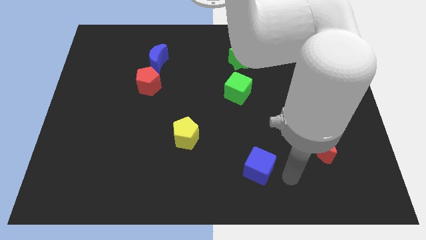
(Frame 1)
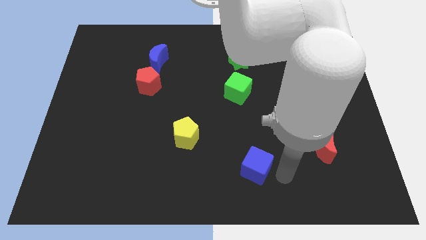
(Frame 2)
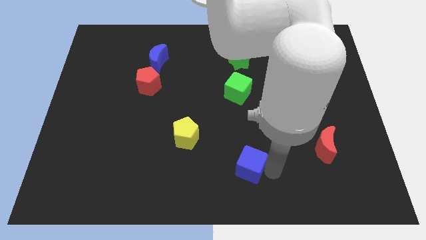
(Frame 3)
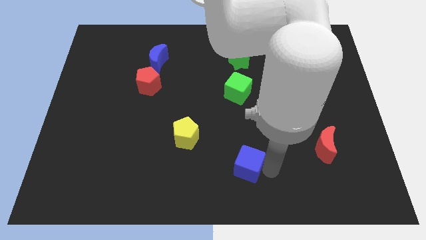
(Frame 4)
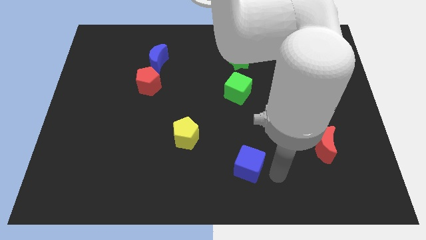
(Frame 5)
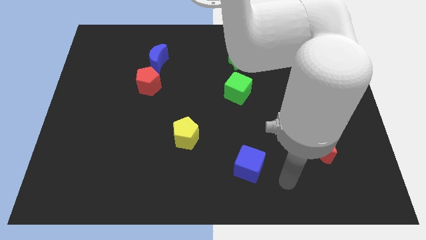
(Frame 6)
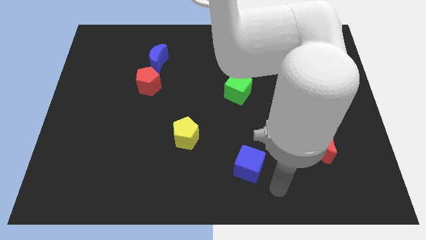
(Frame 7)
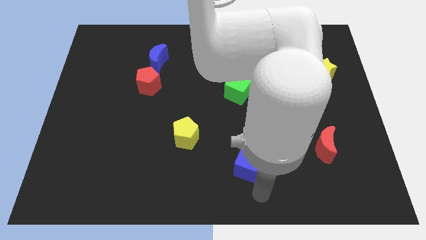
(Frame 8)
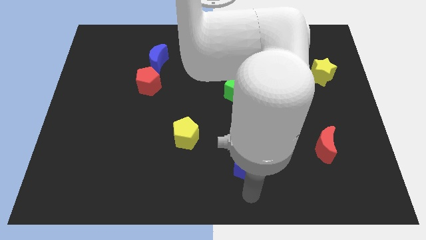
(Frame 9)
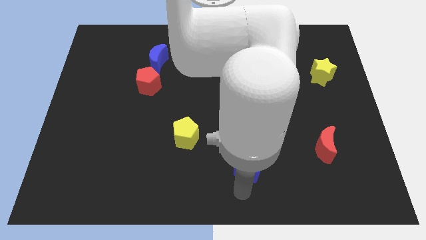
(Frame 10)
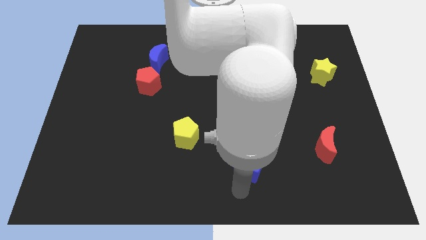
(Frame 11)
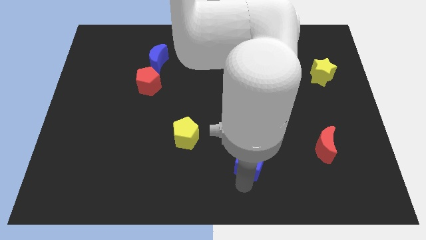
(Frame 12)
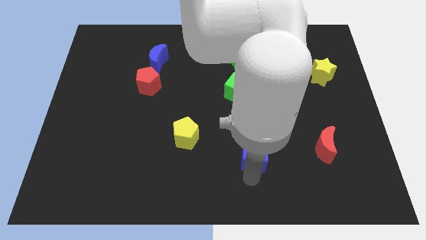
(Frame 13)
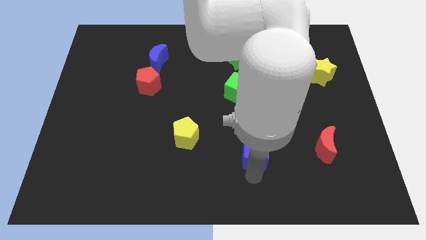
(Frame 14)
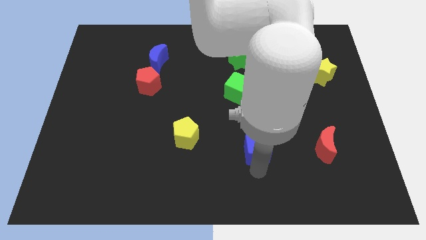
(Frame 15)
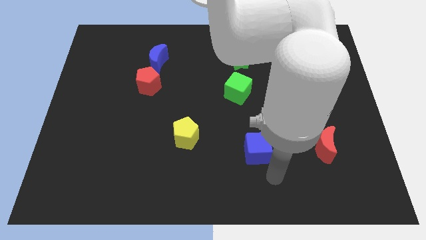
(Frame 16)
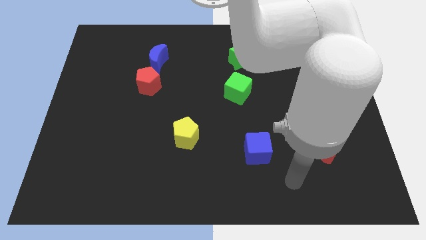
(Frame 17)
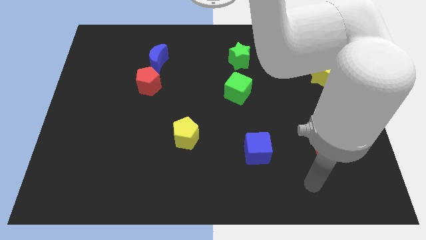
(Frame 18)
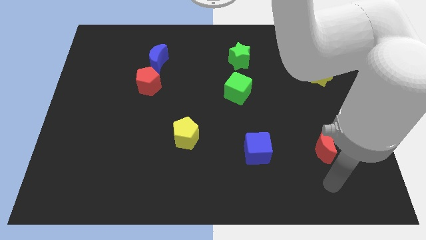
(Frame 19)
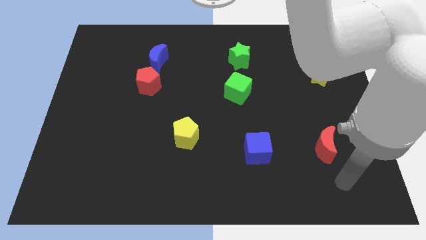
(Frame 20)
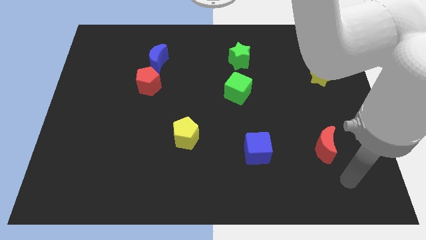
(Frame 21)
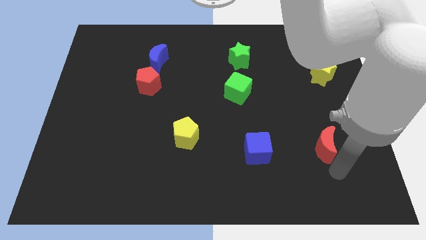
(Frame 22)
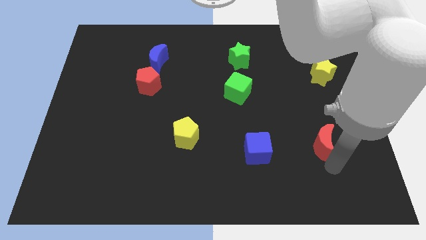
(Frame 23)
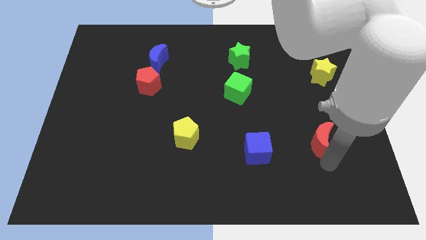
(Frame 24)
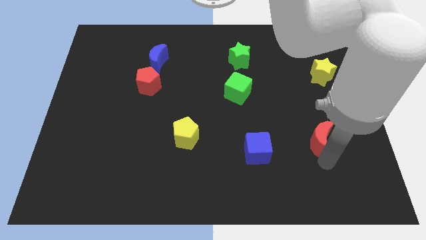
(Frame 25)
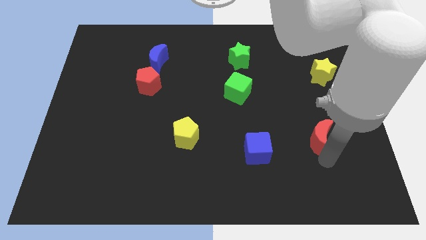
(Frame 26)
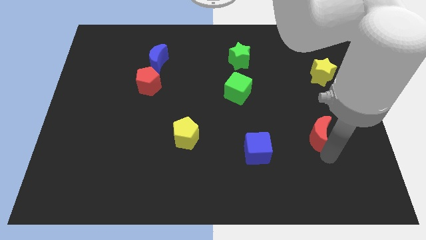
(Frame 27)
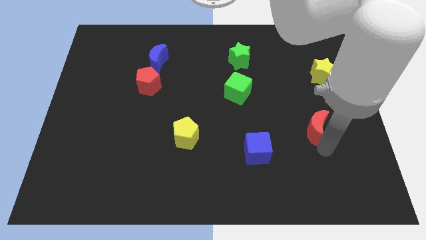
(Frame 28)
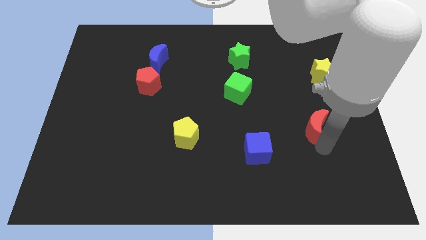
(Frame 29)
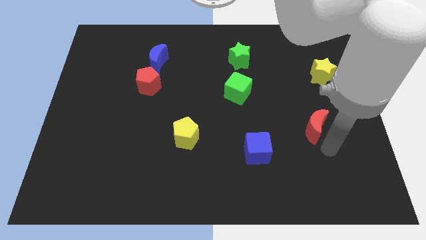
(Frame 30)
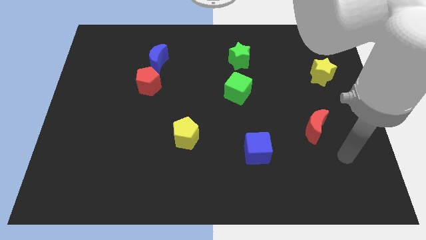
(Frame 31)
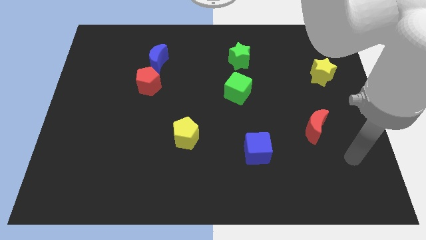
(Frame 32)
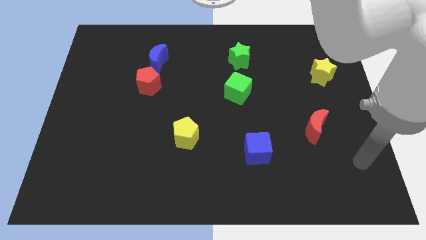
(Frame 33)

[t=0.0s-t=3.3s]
drag the red moon diagonally to the bottom right of the green cube

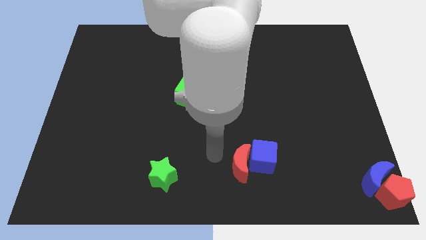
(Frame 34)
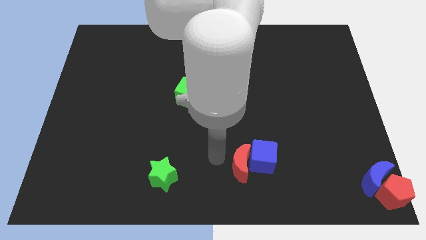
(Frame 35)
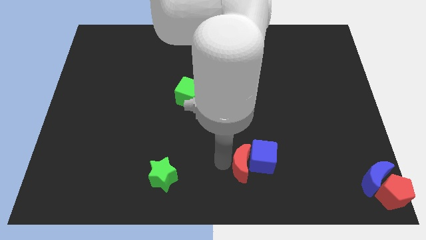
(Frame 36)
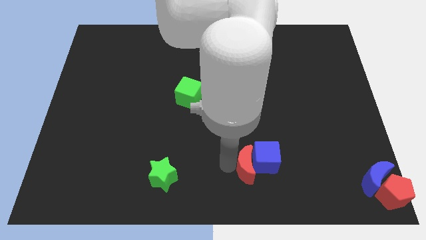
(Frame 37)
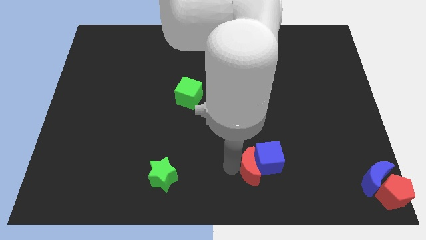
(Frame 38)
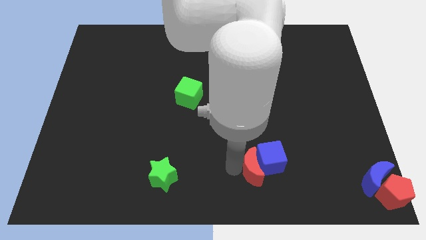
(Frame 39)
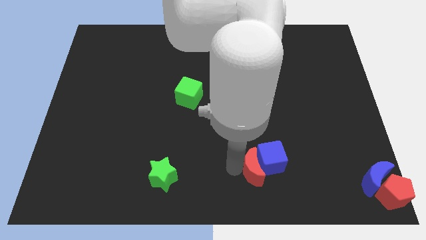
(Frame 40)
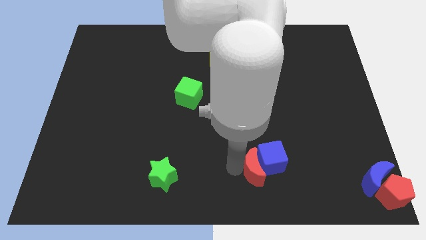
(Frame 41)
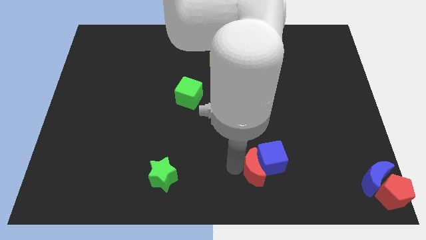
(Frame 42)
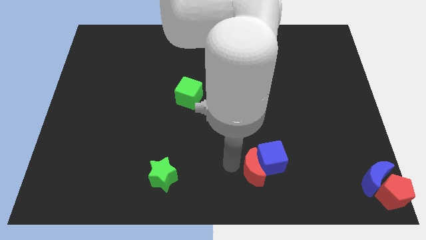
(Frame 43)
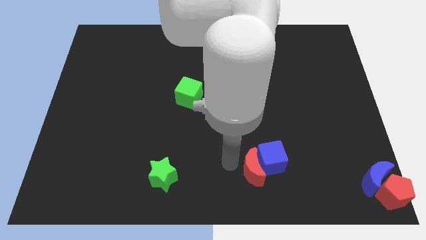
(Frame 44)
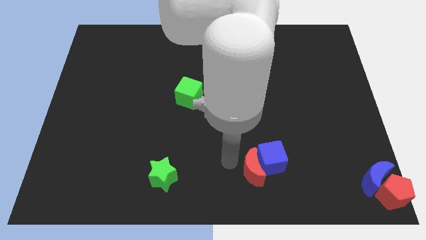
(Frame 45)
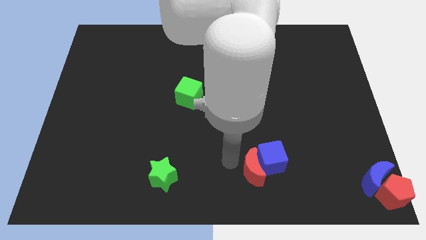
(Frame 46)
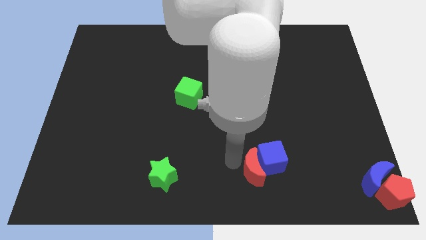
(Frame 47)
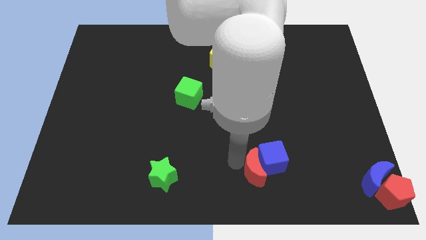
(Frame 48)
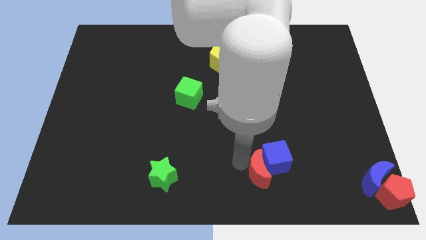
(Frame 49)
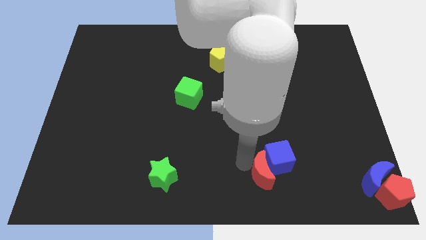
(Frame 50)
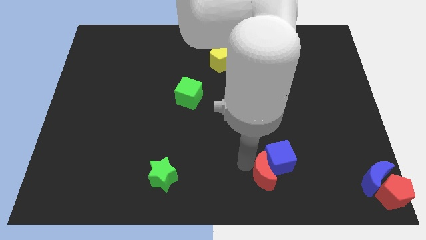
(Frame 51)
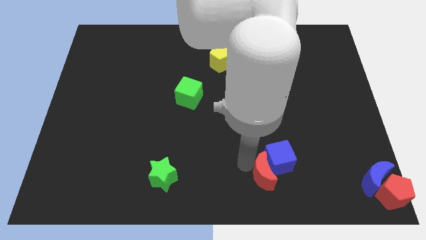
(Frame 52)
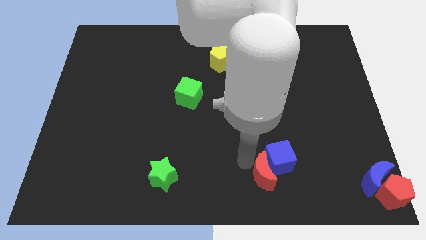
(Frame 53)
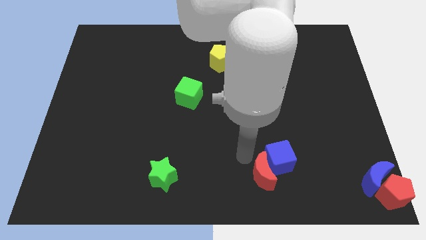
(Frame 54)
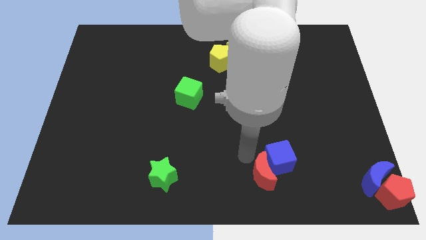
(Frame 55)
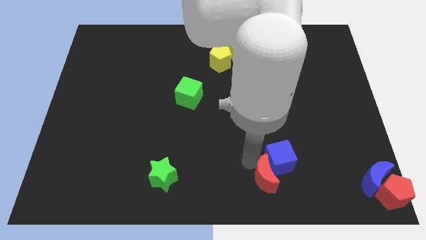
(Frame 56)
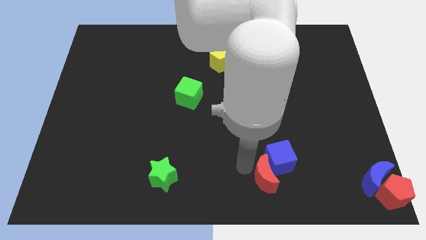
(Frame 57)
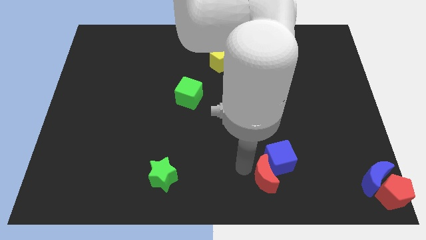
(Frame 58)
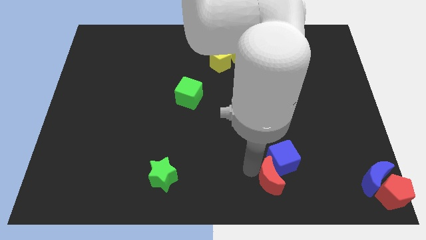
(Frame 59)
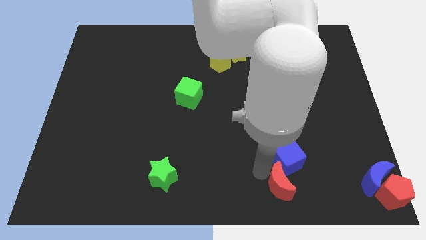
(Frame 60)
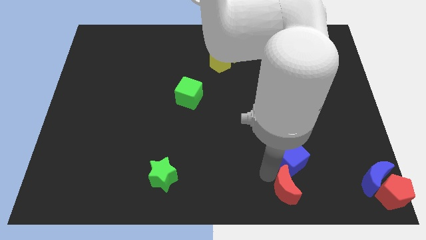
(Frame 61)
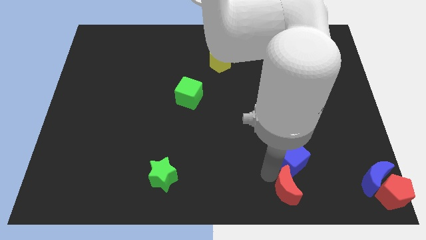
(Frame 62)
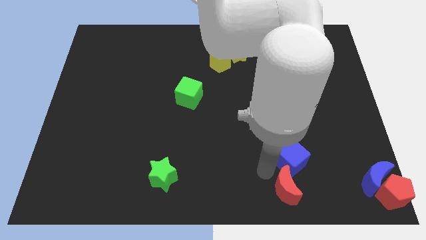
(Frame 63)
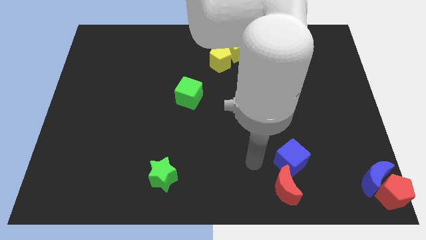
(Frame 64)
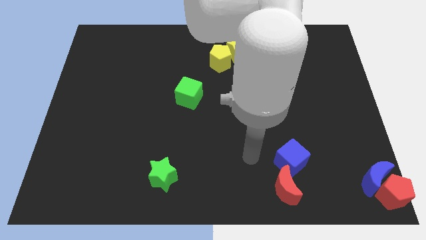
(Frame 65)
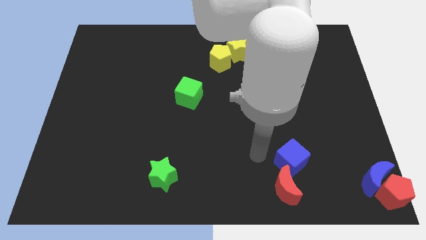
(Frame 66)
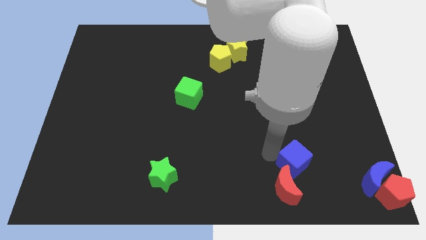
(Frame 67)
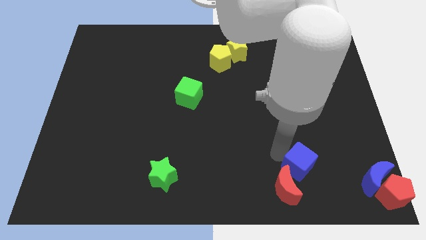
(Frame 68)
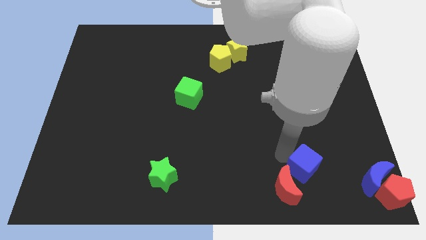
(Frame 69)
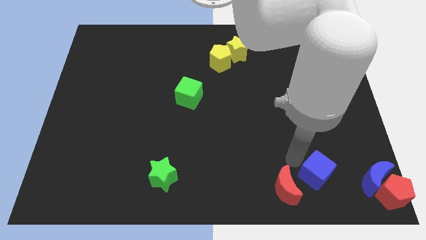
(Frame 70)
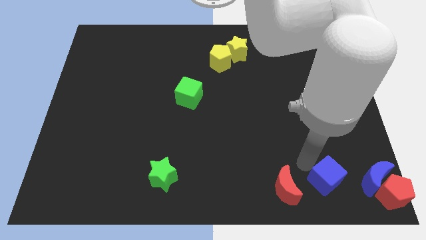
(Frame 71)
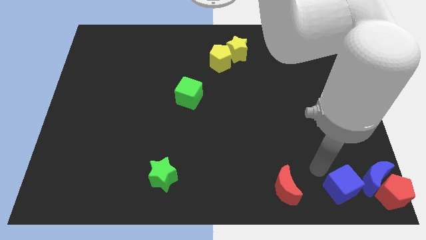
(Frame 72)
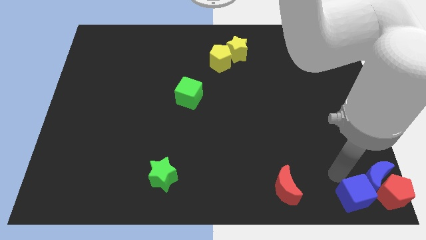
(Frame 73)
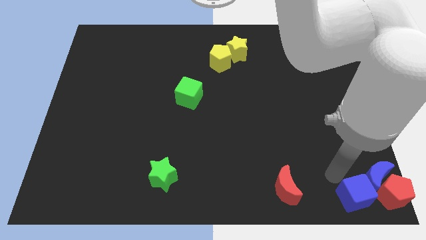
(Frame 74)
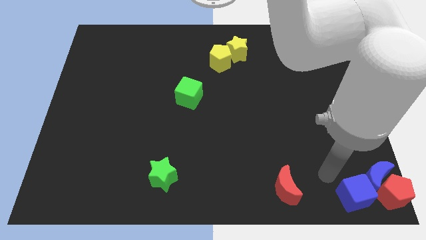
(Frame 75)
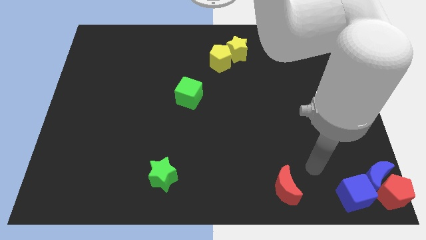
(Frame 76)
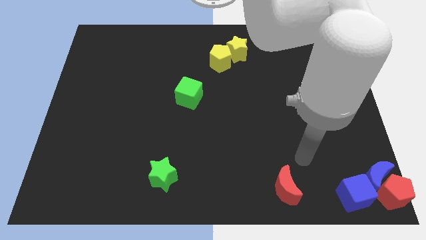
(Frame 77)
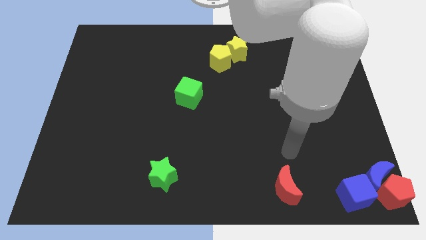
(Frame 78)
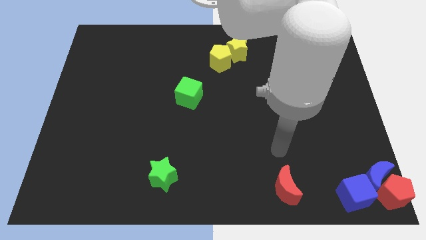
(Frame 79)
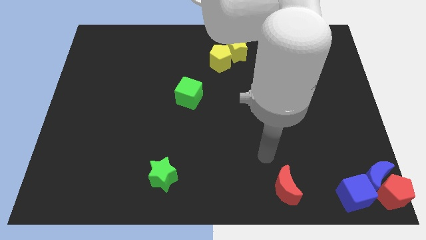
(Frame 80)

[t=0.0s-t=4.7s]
separate the blue cube from the red moon

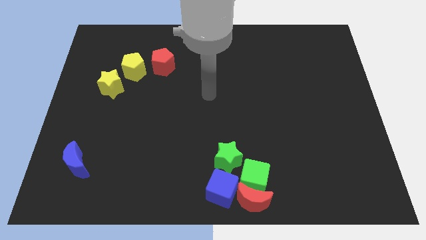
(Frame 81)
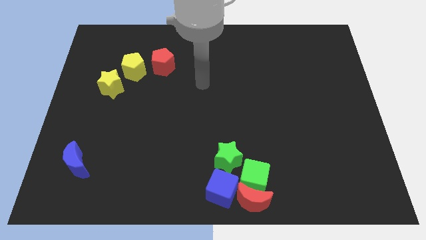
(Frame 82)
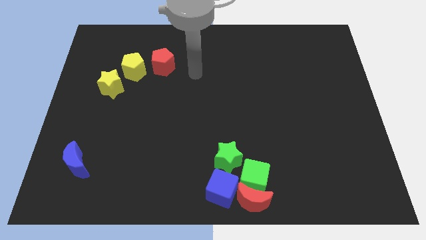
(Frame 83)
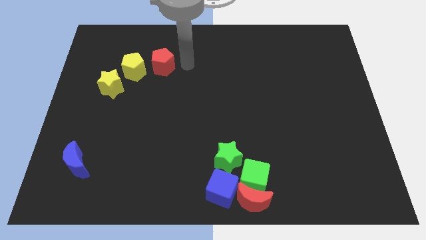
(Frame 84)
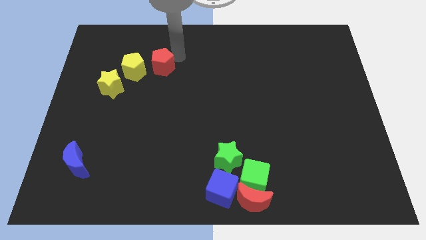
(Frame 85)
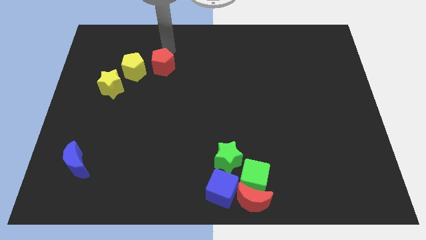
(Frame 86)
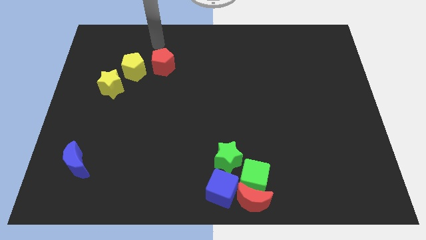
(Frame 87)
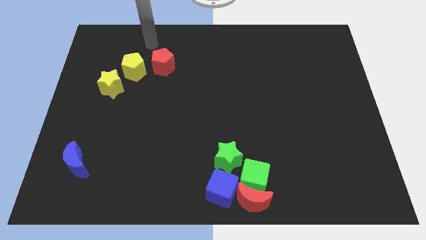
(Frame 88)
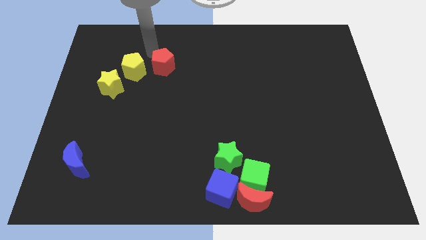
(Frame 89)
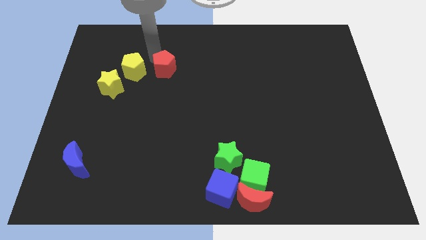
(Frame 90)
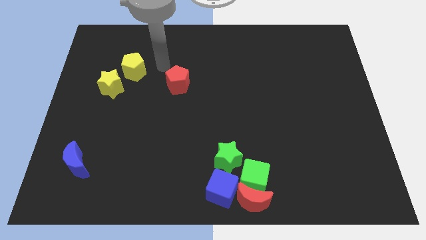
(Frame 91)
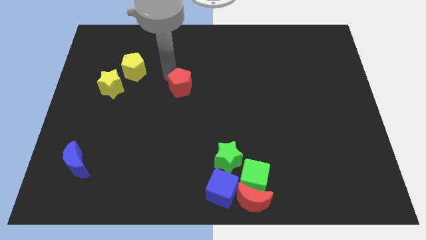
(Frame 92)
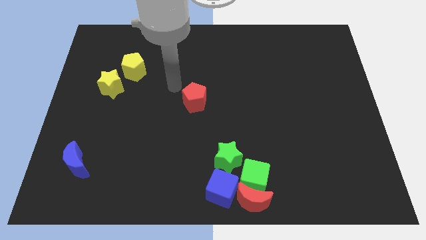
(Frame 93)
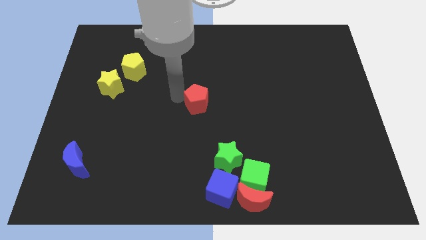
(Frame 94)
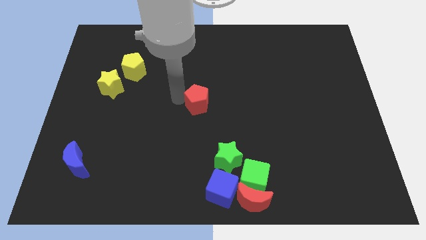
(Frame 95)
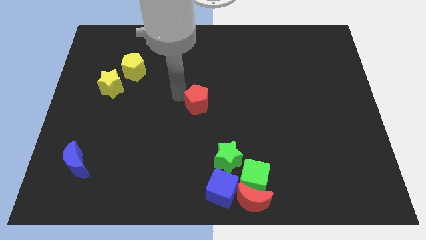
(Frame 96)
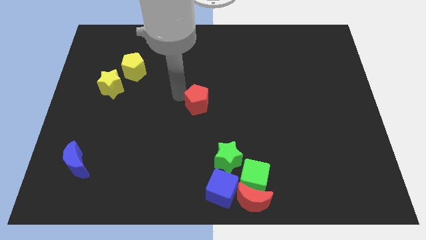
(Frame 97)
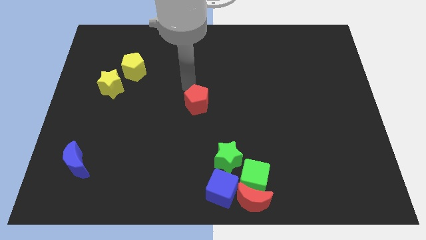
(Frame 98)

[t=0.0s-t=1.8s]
push the red pentagon towards the top left side of the green star
